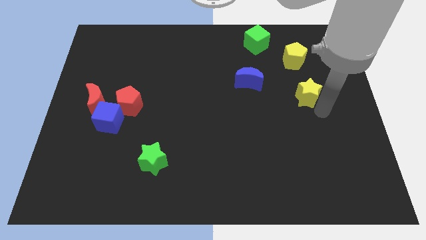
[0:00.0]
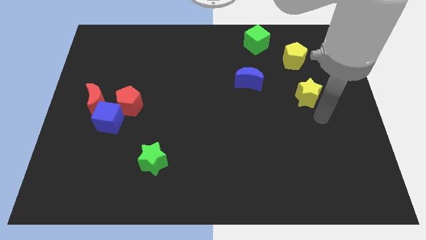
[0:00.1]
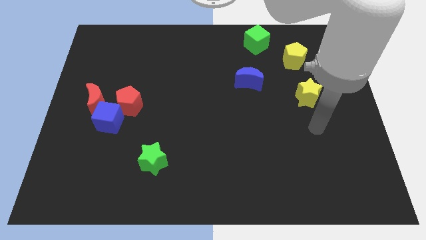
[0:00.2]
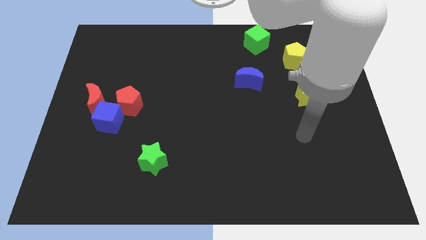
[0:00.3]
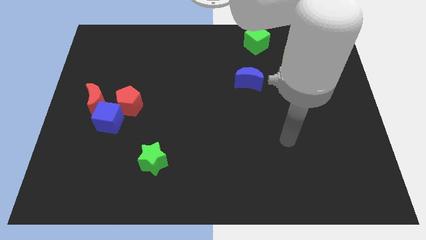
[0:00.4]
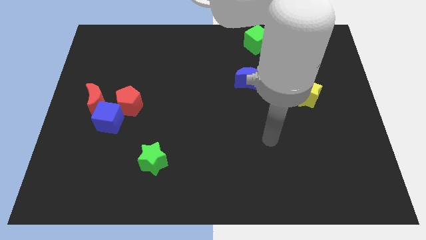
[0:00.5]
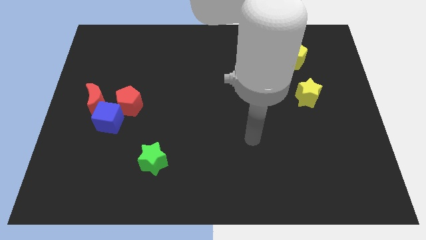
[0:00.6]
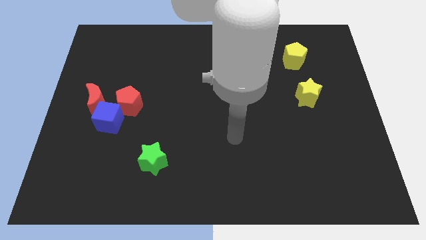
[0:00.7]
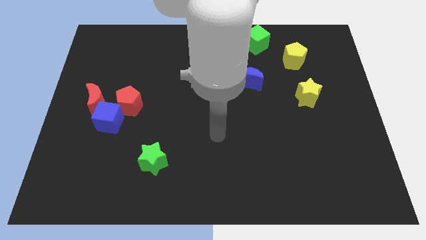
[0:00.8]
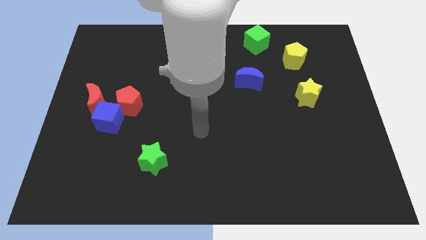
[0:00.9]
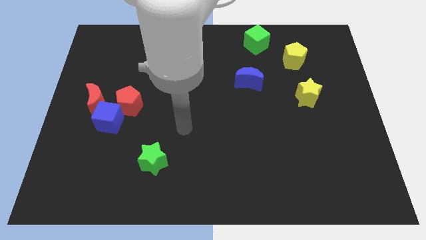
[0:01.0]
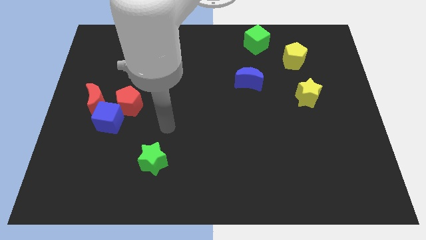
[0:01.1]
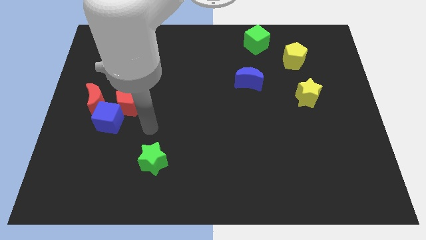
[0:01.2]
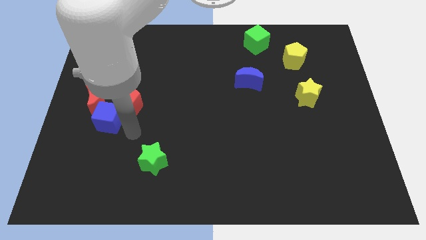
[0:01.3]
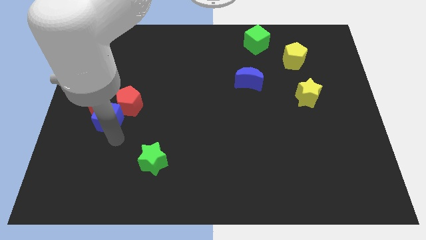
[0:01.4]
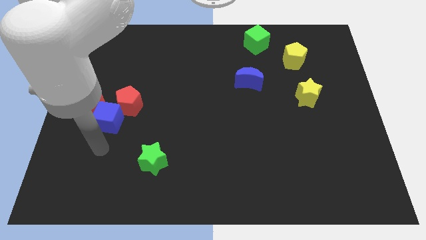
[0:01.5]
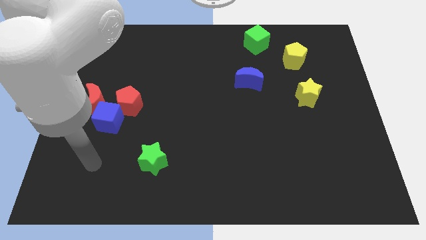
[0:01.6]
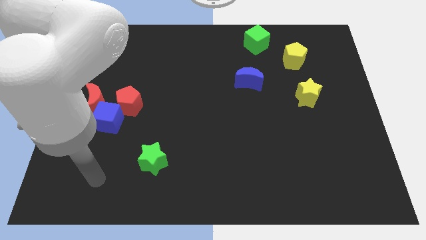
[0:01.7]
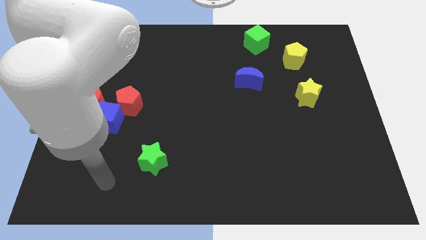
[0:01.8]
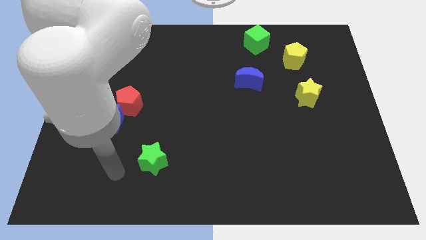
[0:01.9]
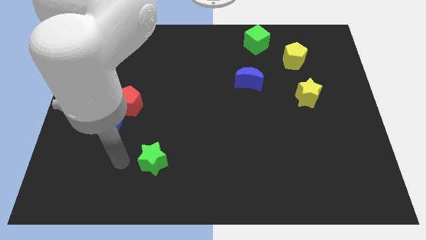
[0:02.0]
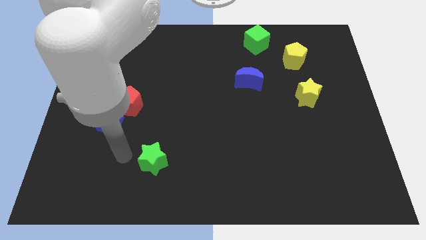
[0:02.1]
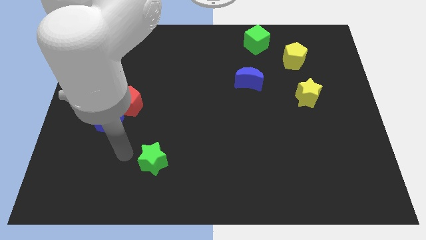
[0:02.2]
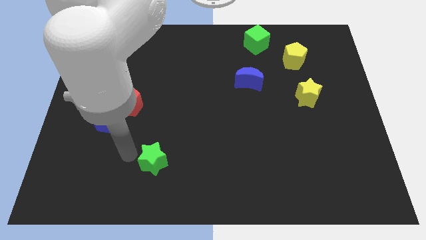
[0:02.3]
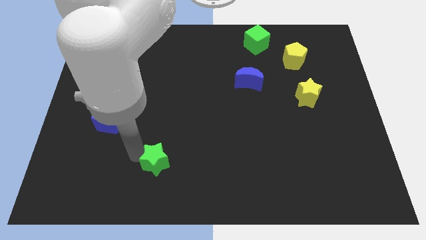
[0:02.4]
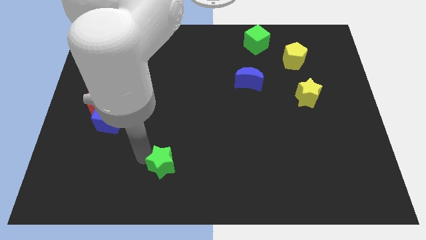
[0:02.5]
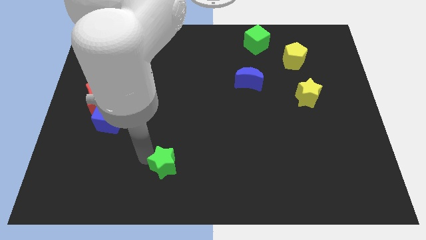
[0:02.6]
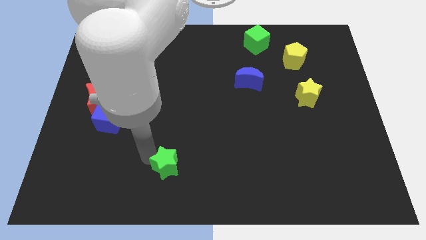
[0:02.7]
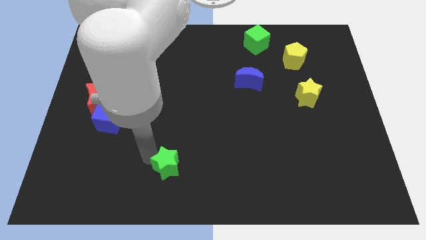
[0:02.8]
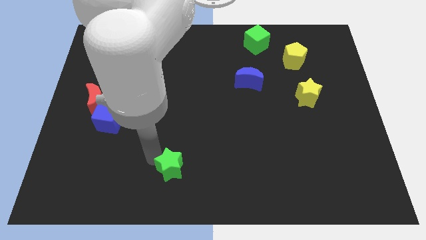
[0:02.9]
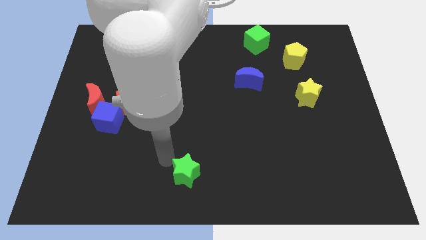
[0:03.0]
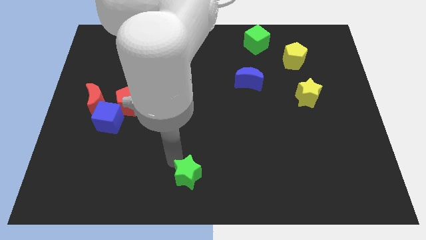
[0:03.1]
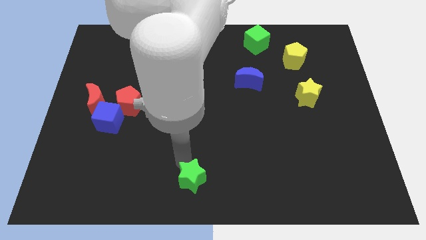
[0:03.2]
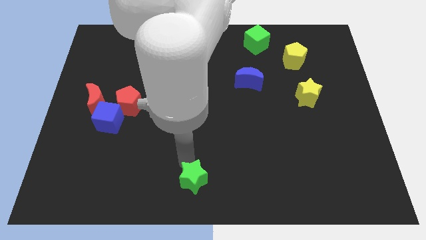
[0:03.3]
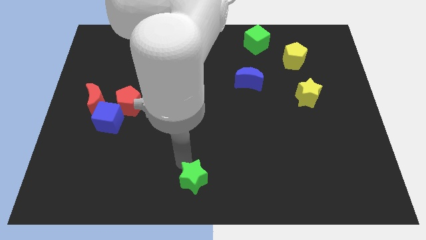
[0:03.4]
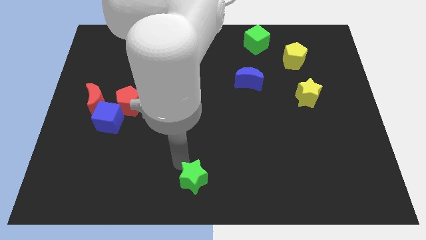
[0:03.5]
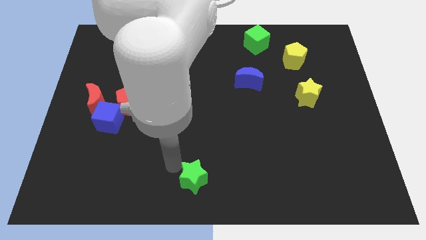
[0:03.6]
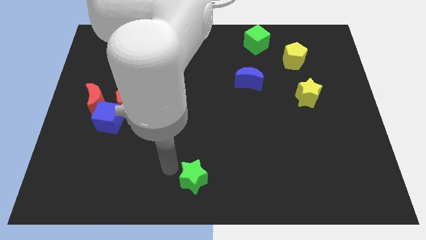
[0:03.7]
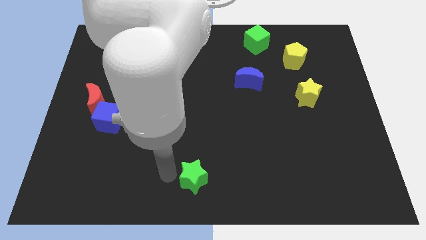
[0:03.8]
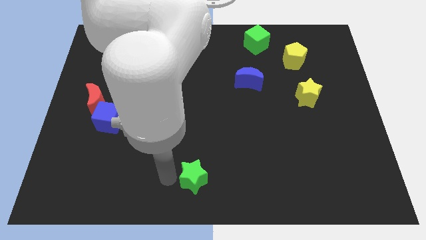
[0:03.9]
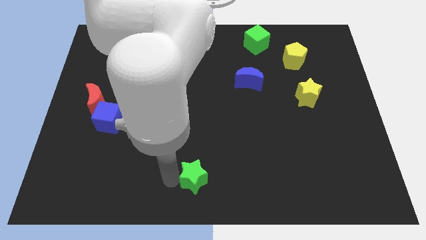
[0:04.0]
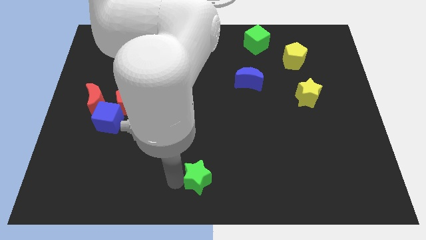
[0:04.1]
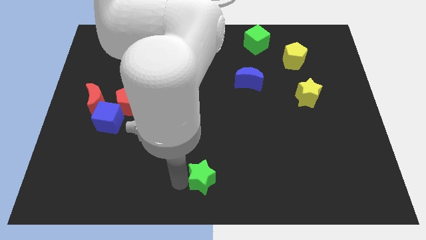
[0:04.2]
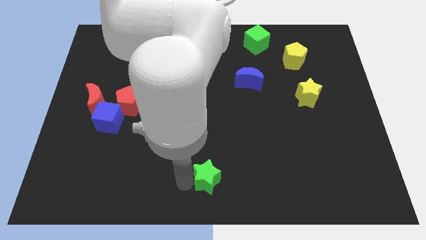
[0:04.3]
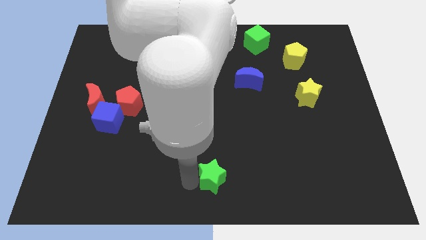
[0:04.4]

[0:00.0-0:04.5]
slide the green star to the bottom center of the table

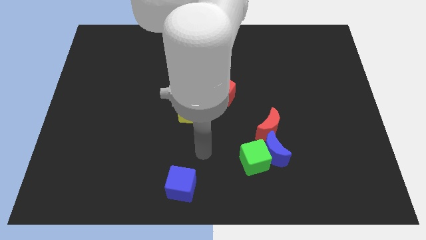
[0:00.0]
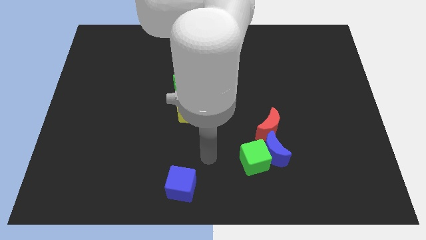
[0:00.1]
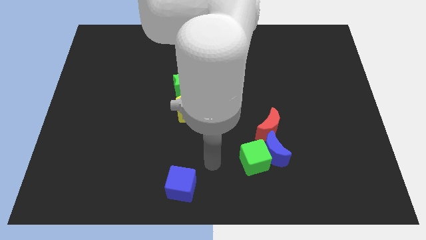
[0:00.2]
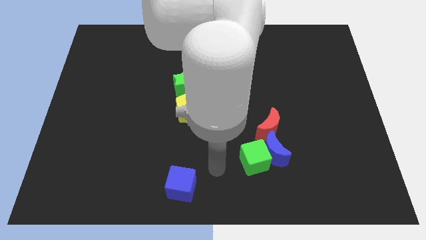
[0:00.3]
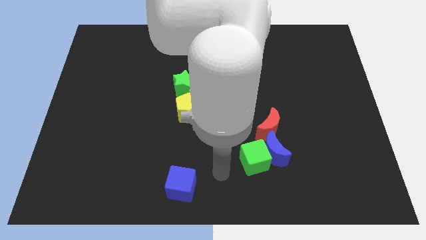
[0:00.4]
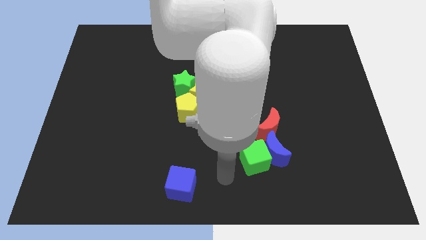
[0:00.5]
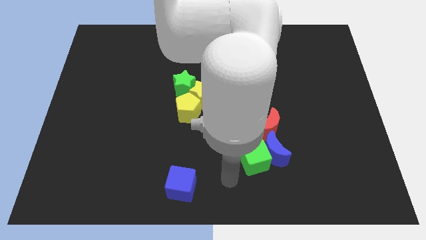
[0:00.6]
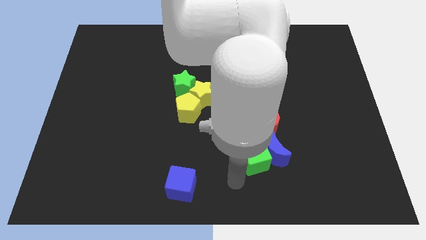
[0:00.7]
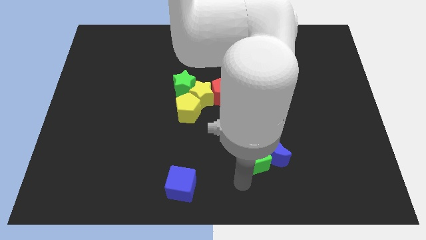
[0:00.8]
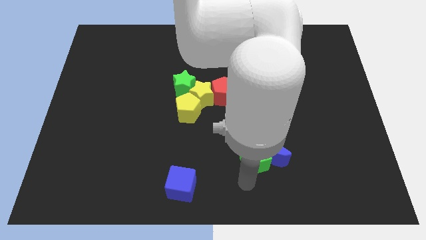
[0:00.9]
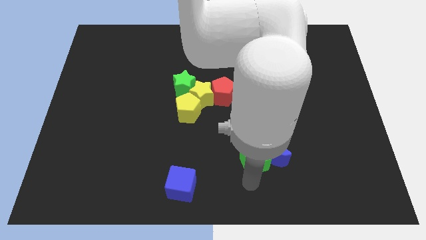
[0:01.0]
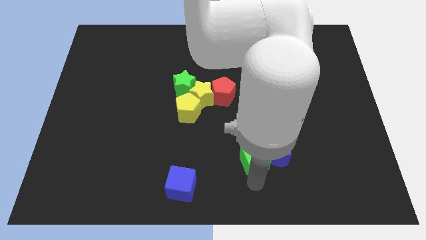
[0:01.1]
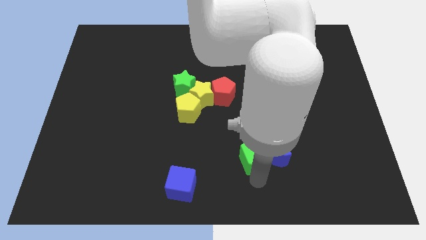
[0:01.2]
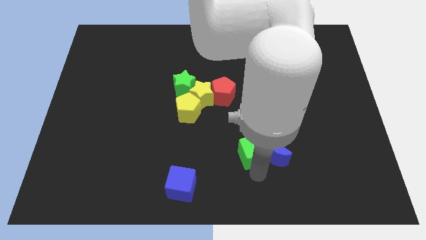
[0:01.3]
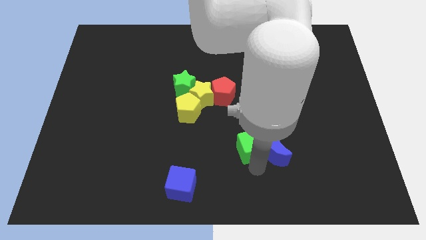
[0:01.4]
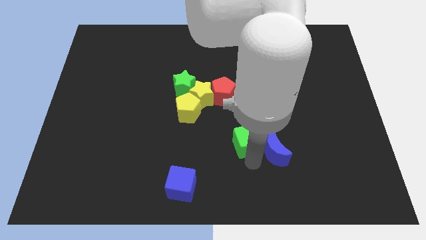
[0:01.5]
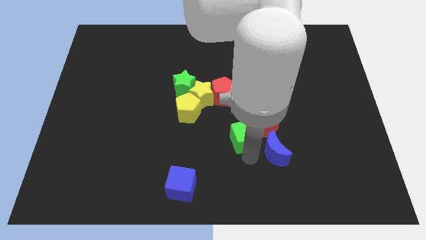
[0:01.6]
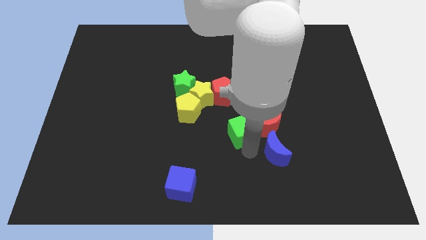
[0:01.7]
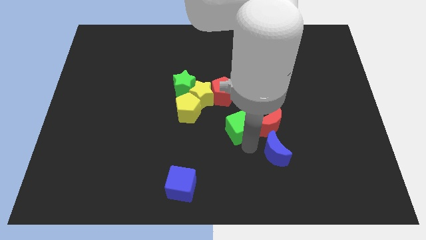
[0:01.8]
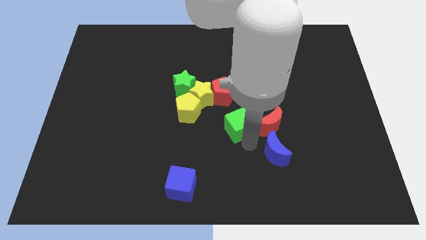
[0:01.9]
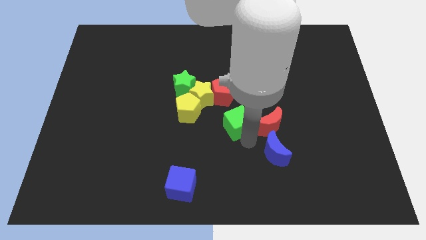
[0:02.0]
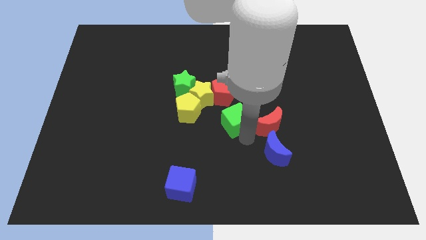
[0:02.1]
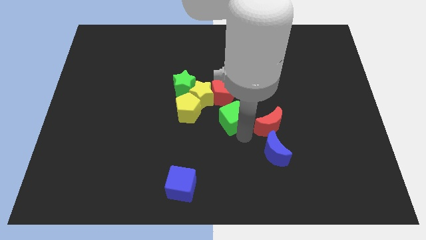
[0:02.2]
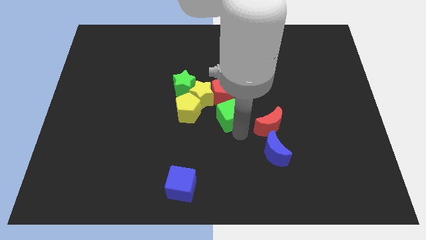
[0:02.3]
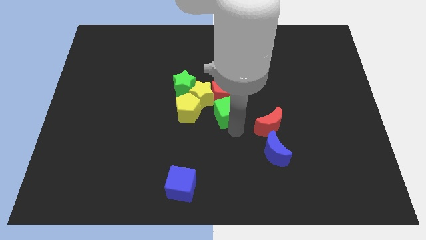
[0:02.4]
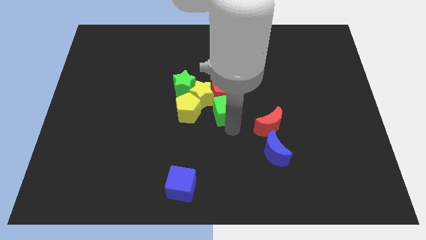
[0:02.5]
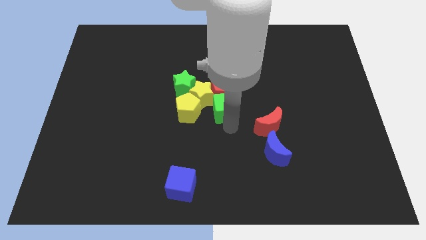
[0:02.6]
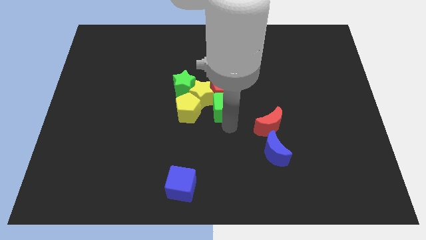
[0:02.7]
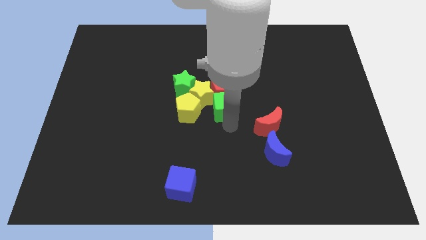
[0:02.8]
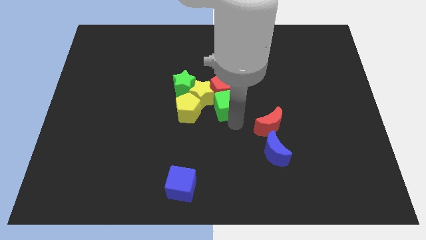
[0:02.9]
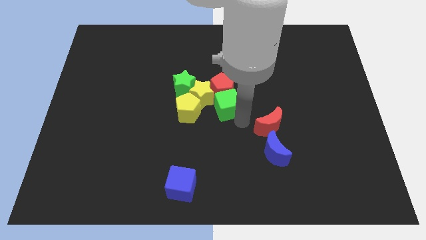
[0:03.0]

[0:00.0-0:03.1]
move the green cube to the bottom of the red pentagon

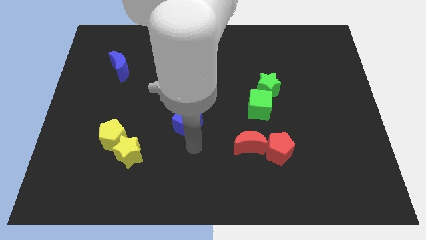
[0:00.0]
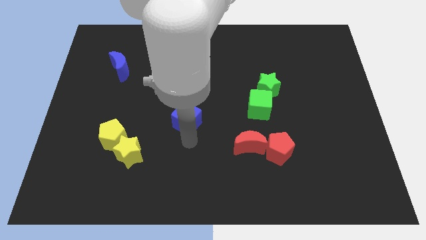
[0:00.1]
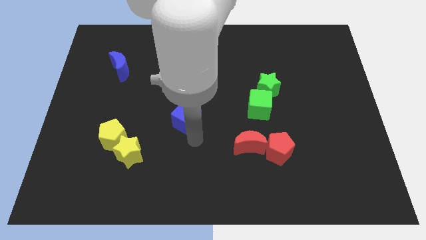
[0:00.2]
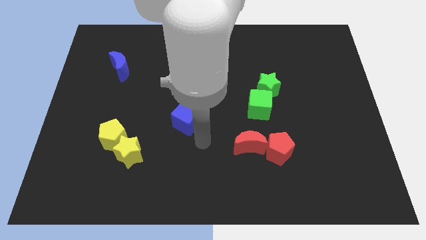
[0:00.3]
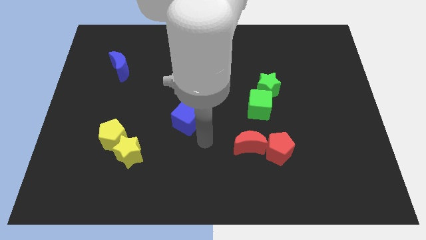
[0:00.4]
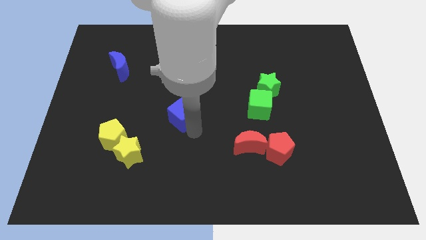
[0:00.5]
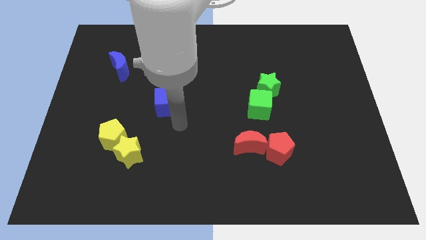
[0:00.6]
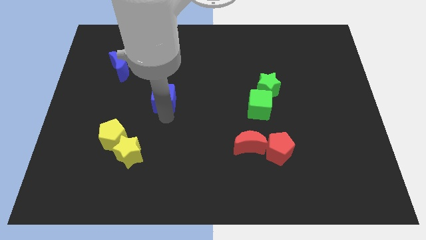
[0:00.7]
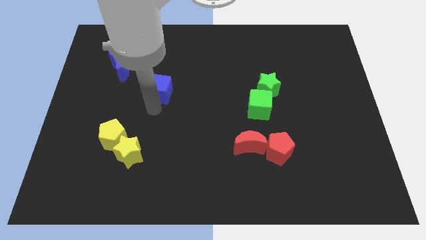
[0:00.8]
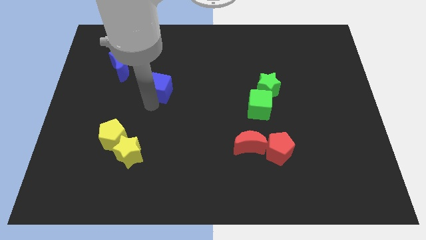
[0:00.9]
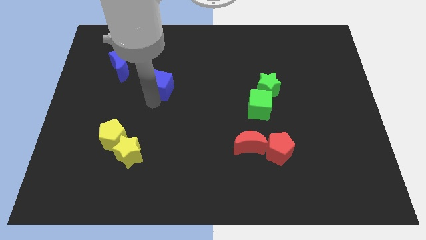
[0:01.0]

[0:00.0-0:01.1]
move the blue cube up slightly
